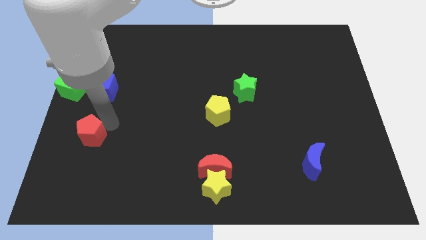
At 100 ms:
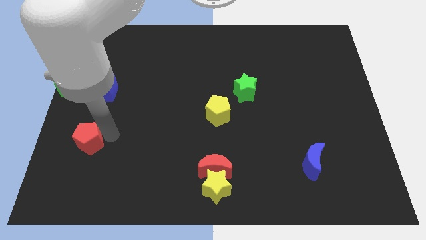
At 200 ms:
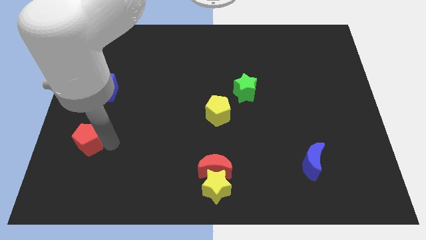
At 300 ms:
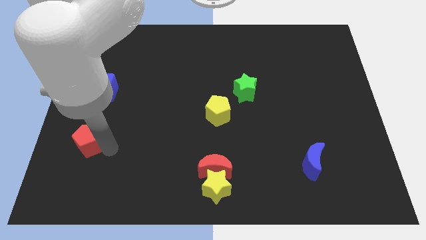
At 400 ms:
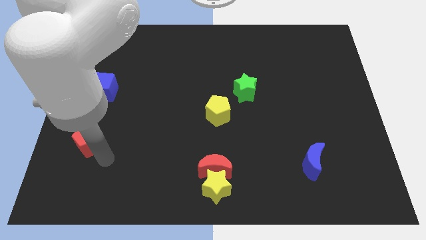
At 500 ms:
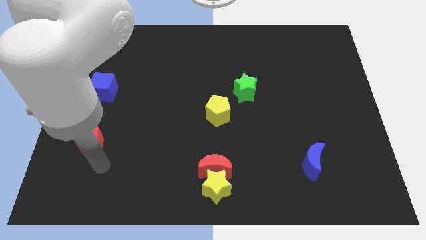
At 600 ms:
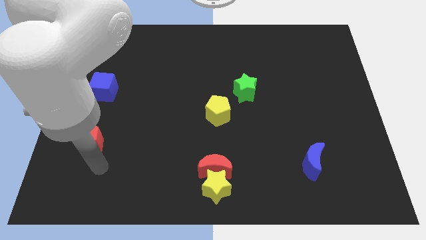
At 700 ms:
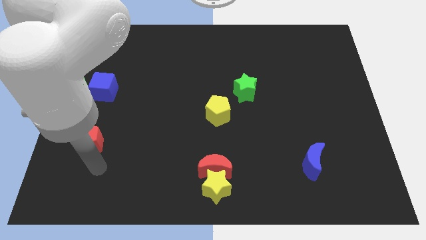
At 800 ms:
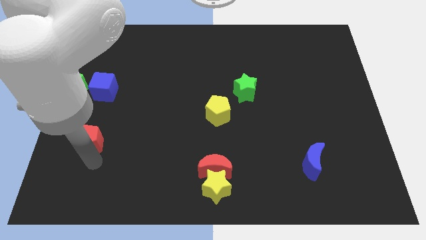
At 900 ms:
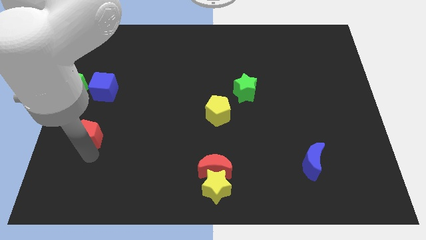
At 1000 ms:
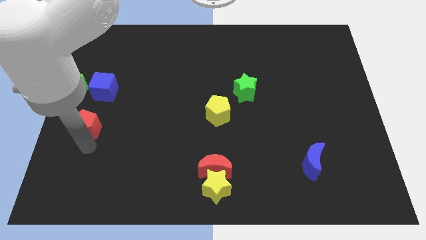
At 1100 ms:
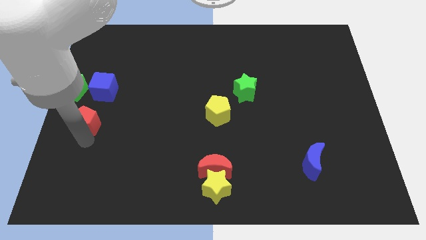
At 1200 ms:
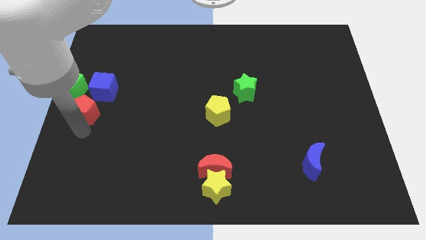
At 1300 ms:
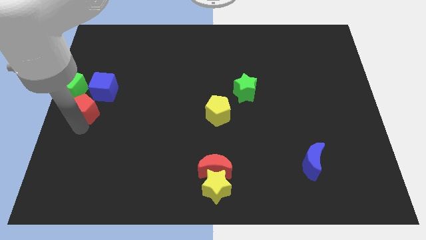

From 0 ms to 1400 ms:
place red pentagon to the bottom right of green cube

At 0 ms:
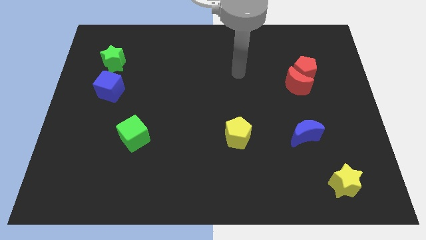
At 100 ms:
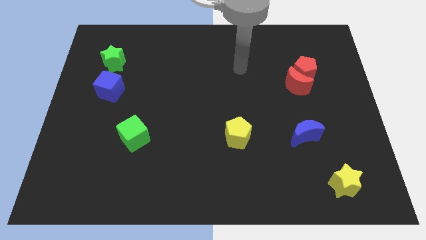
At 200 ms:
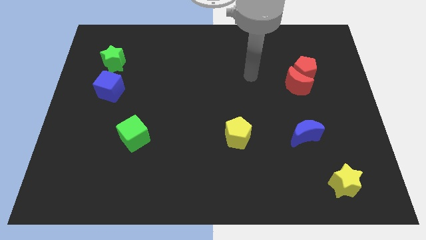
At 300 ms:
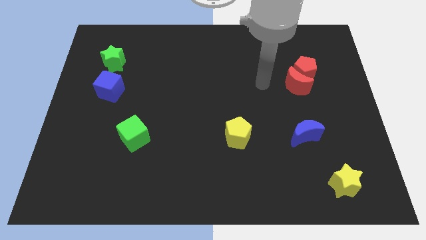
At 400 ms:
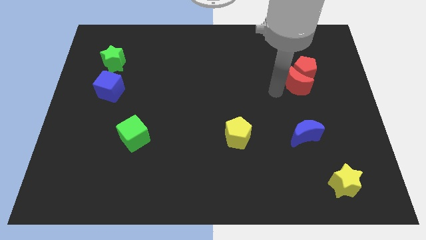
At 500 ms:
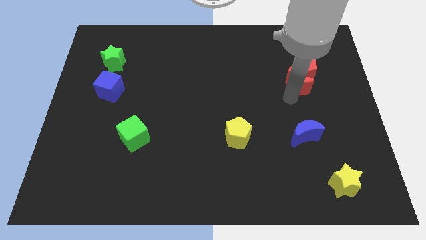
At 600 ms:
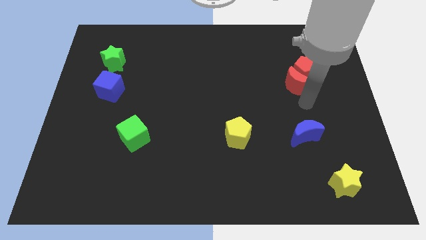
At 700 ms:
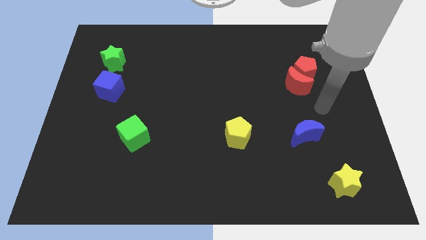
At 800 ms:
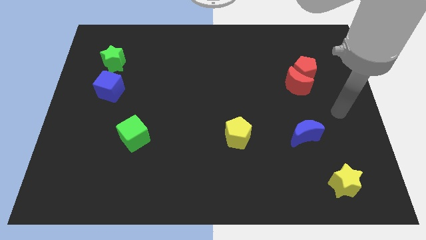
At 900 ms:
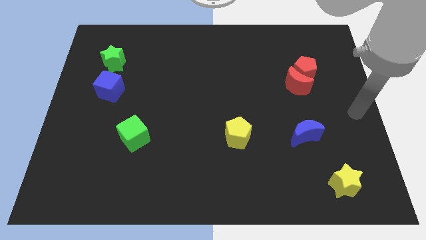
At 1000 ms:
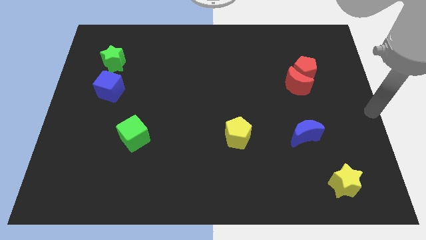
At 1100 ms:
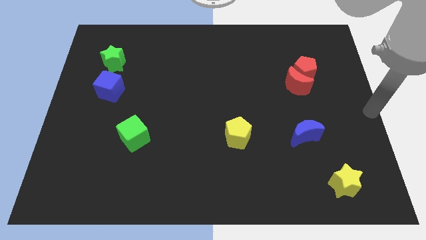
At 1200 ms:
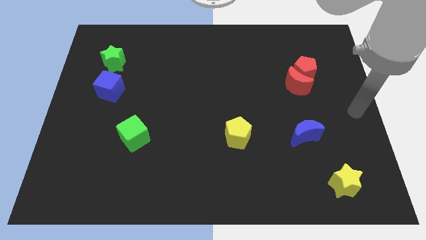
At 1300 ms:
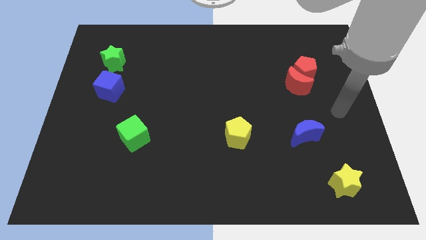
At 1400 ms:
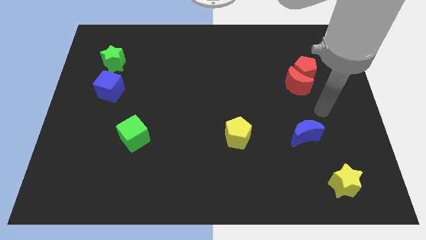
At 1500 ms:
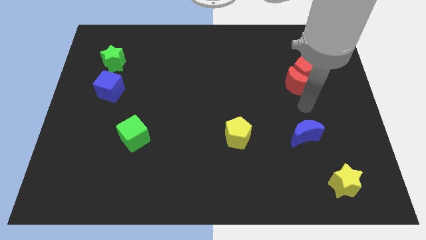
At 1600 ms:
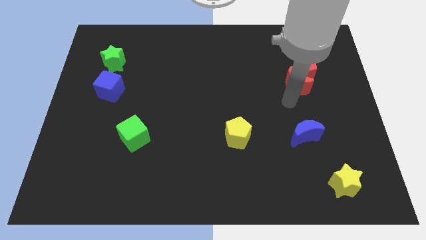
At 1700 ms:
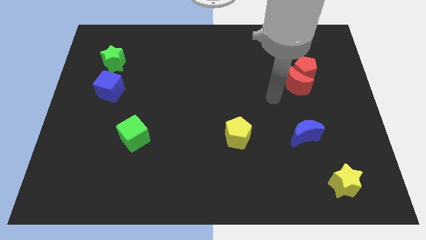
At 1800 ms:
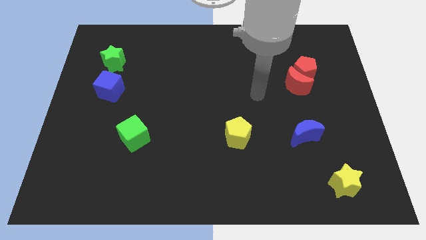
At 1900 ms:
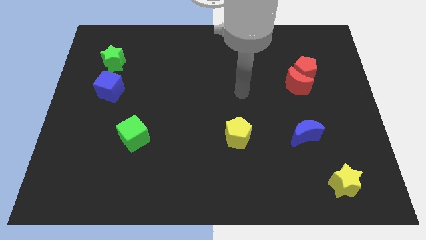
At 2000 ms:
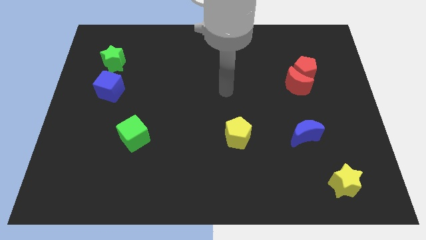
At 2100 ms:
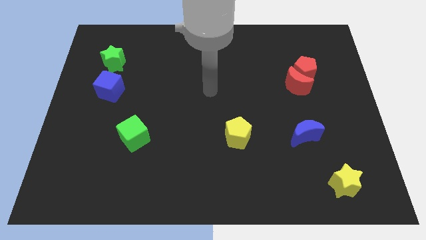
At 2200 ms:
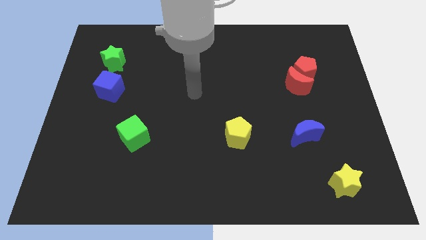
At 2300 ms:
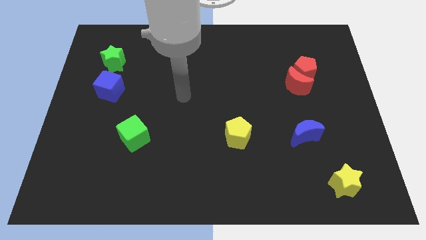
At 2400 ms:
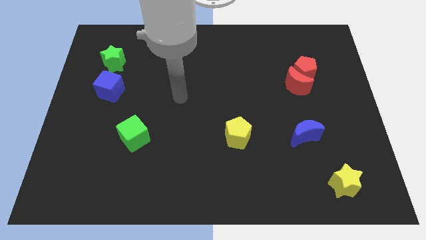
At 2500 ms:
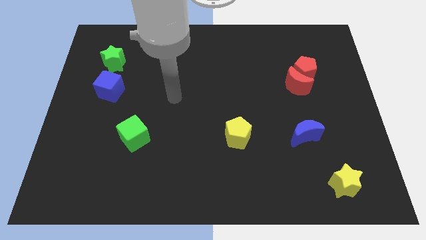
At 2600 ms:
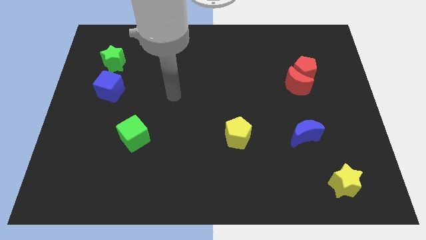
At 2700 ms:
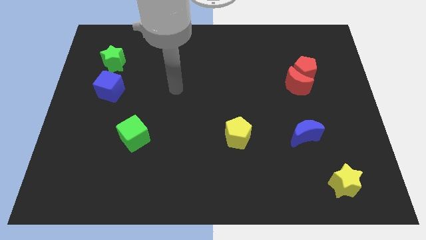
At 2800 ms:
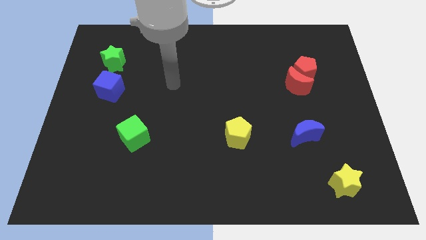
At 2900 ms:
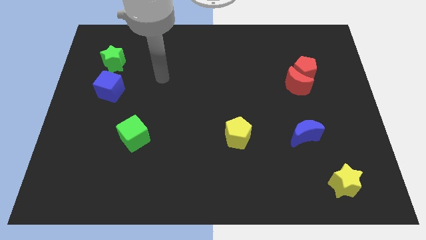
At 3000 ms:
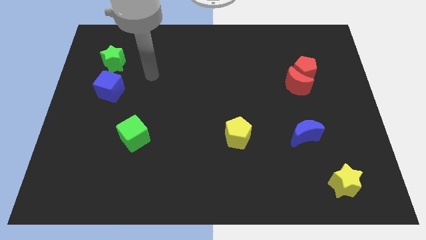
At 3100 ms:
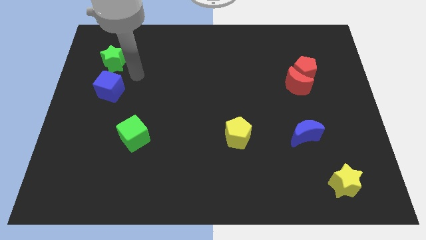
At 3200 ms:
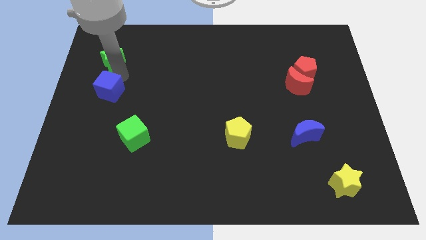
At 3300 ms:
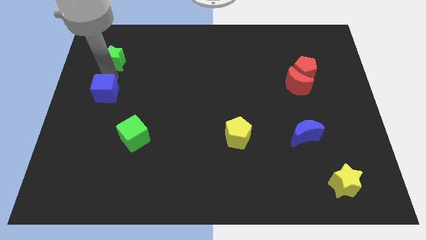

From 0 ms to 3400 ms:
put the blue cube to the bottom side of the green star

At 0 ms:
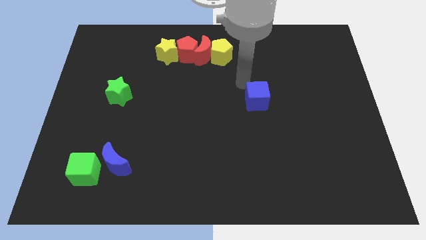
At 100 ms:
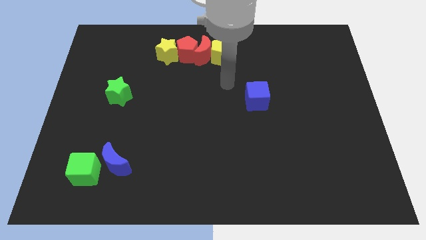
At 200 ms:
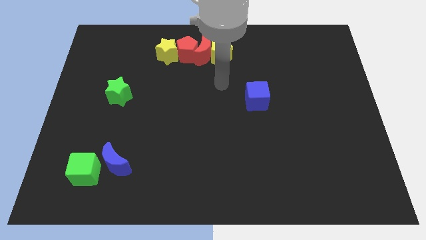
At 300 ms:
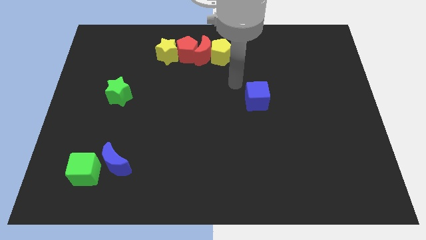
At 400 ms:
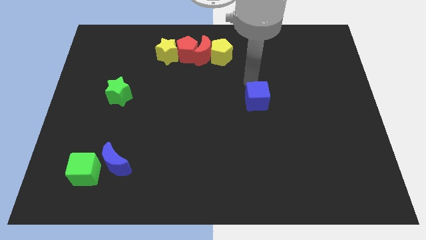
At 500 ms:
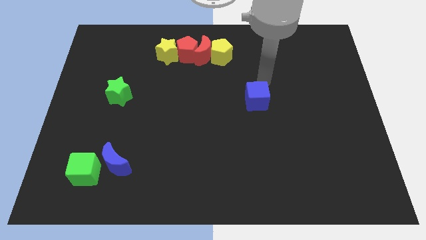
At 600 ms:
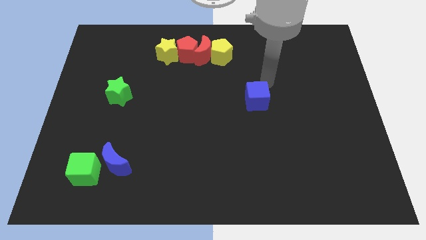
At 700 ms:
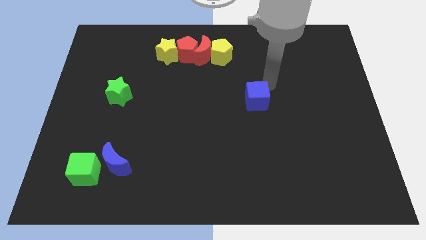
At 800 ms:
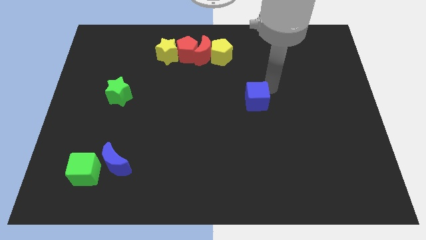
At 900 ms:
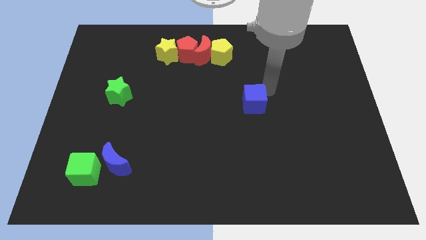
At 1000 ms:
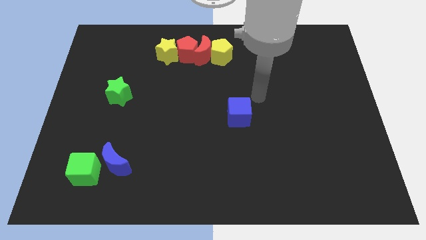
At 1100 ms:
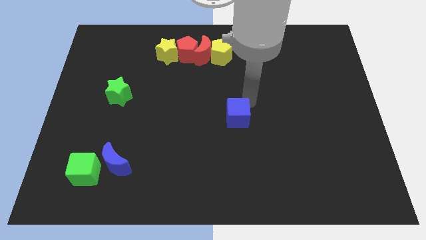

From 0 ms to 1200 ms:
slightly push the blue cube to the middle of board

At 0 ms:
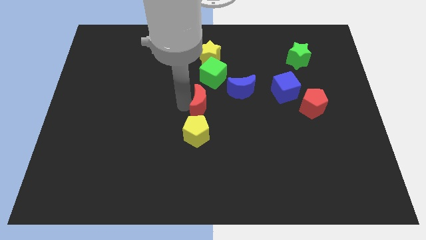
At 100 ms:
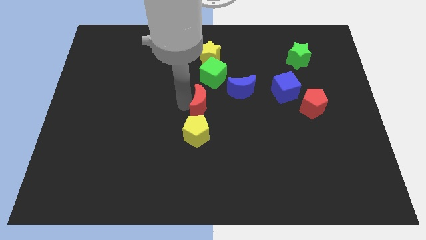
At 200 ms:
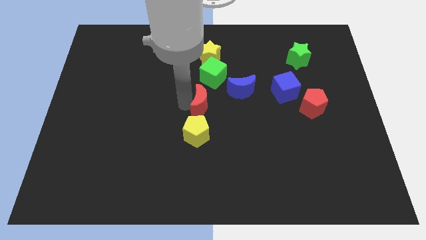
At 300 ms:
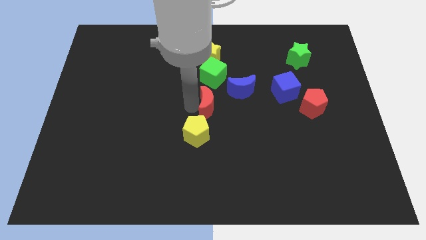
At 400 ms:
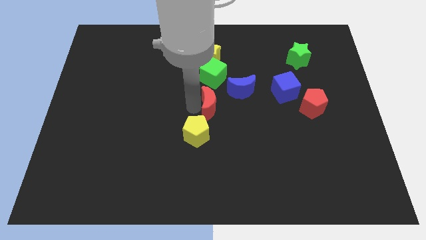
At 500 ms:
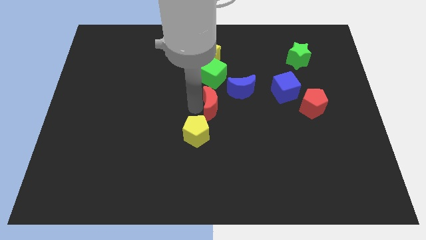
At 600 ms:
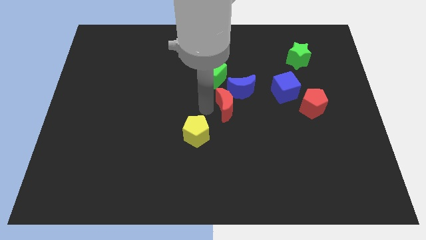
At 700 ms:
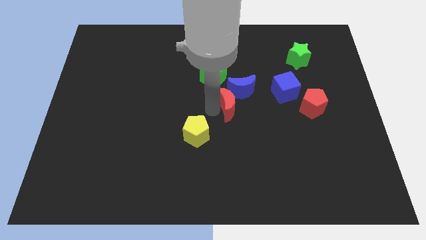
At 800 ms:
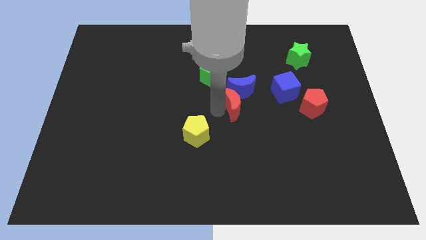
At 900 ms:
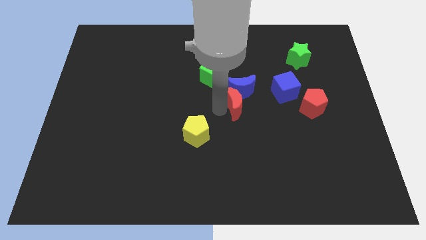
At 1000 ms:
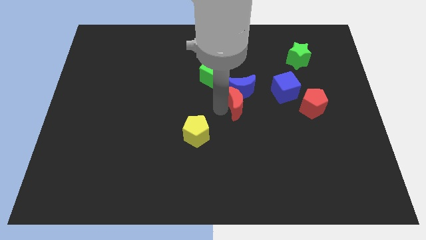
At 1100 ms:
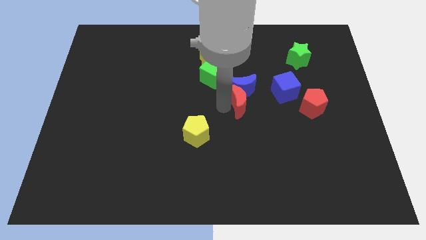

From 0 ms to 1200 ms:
move red moon below the blue moon

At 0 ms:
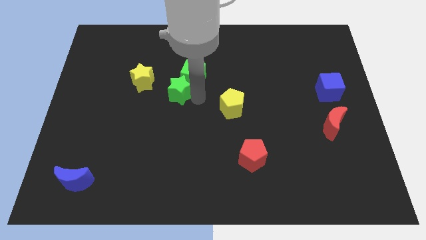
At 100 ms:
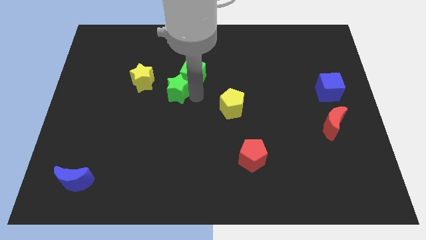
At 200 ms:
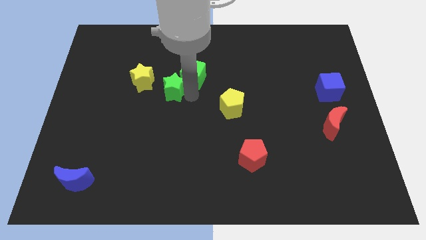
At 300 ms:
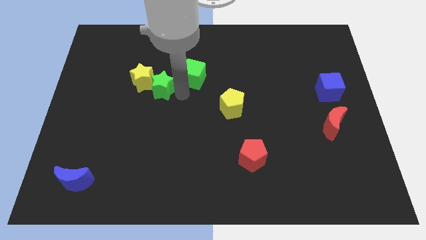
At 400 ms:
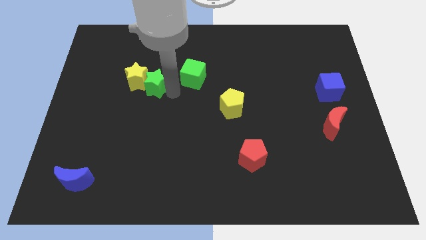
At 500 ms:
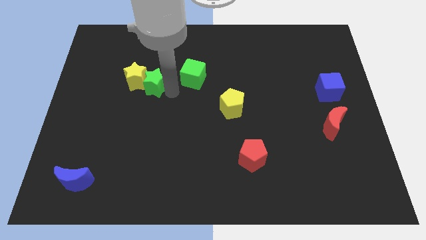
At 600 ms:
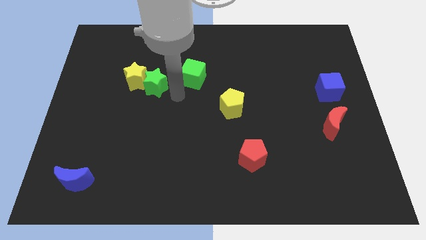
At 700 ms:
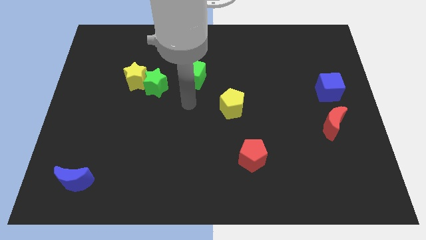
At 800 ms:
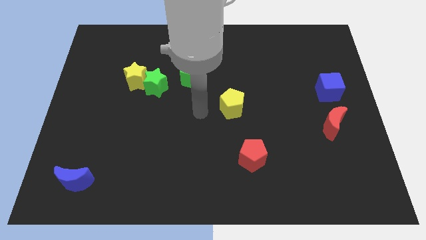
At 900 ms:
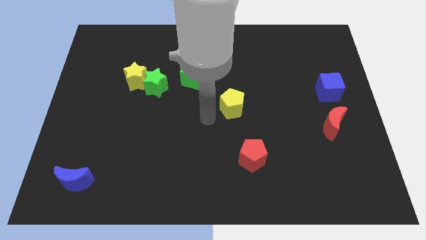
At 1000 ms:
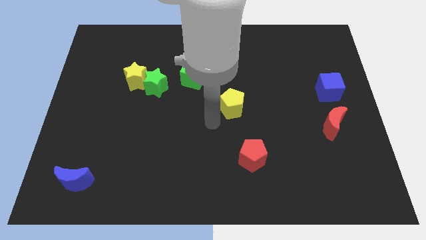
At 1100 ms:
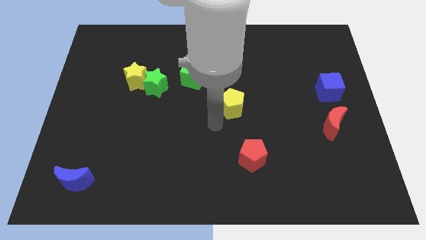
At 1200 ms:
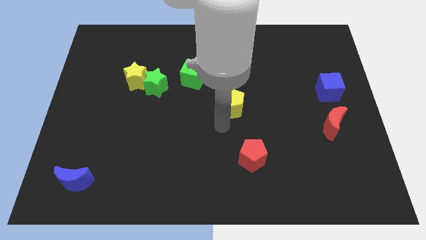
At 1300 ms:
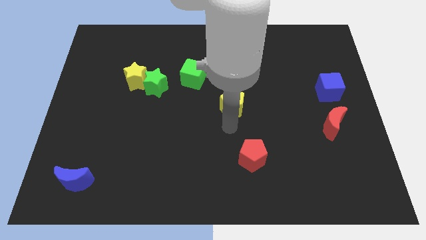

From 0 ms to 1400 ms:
slide the green star into the yellow star

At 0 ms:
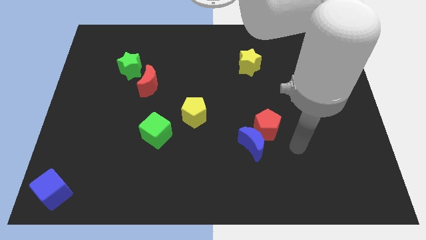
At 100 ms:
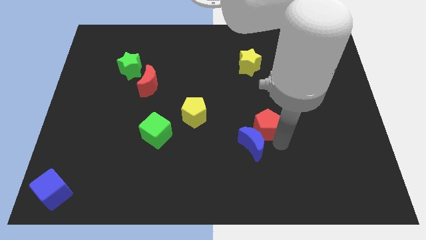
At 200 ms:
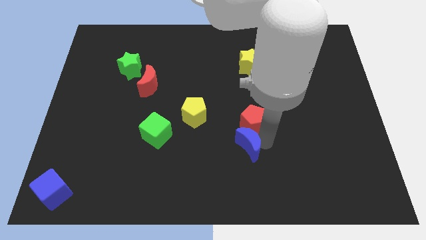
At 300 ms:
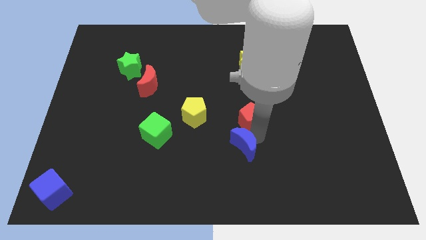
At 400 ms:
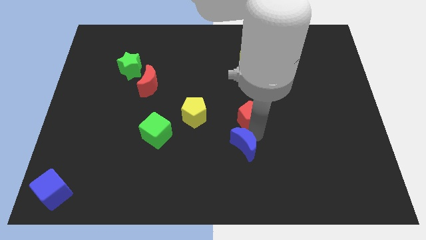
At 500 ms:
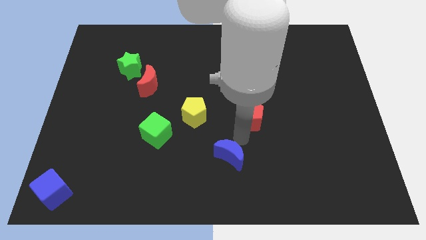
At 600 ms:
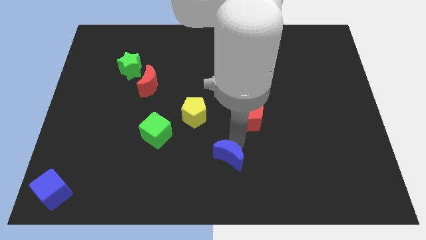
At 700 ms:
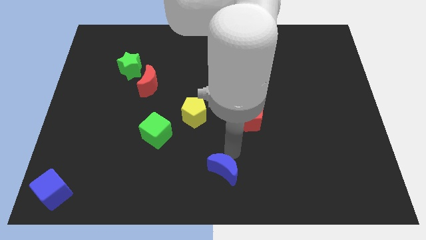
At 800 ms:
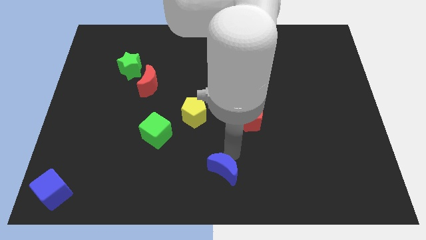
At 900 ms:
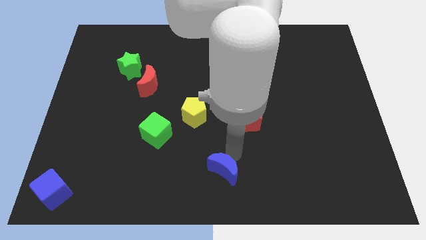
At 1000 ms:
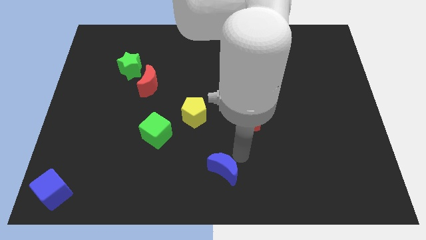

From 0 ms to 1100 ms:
separate the blue moon from the red pentagon
